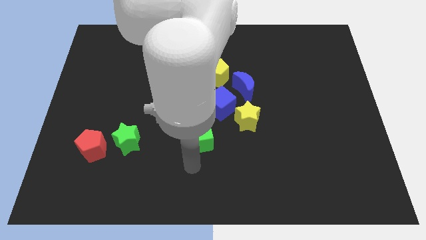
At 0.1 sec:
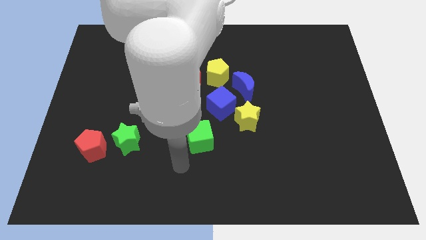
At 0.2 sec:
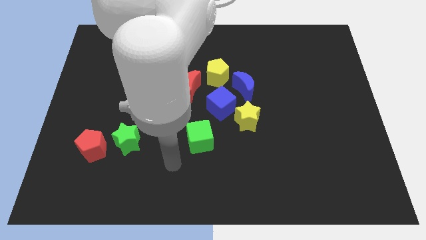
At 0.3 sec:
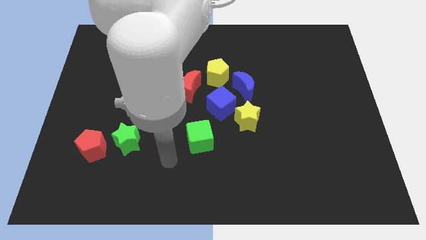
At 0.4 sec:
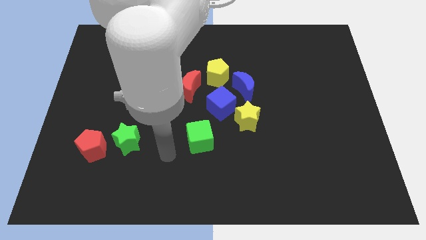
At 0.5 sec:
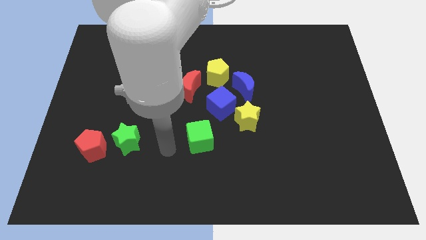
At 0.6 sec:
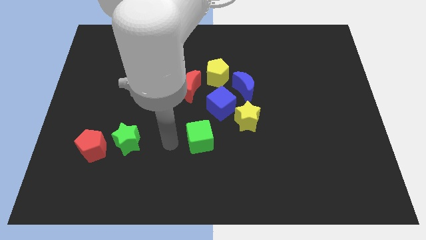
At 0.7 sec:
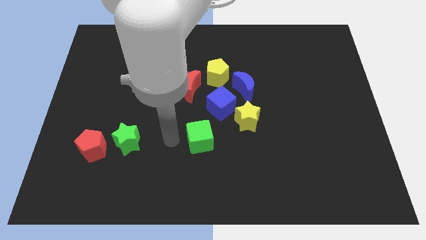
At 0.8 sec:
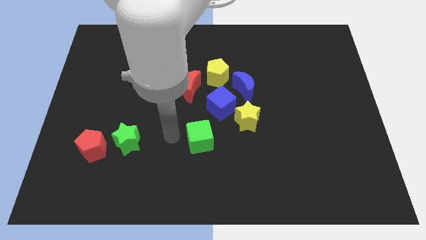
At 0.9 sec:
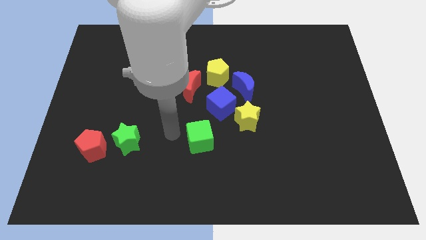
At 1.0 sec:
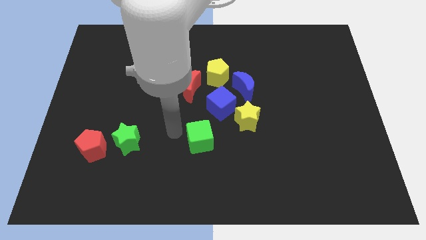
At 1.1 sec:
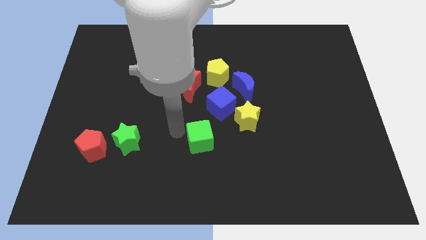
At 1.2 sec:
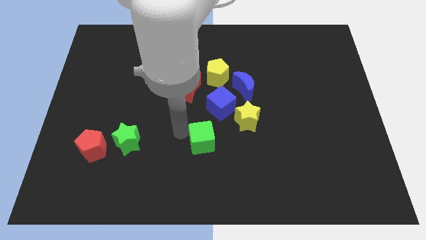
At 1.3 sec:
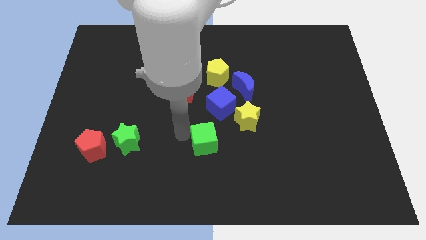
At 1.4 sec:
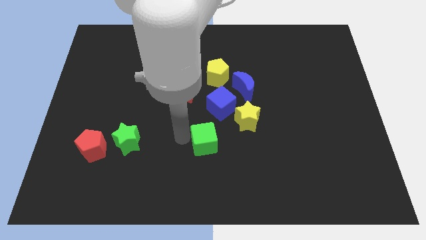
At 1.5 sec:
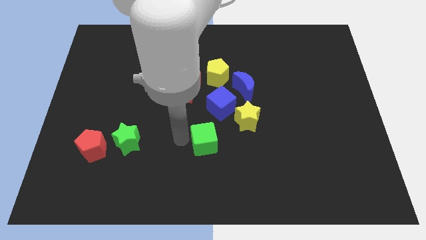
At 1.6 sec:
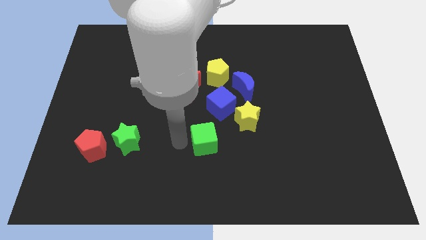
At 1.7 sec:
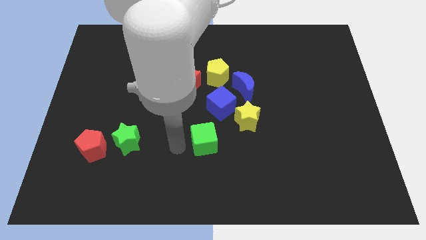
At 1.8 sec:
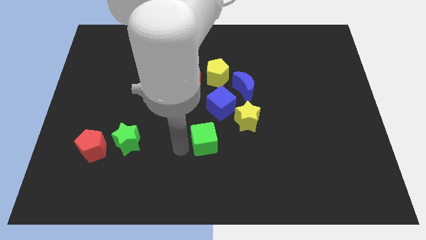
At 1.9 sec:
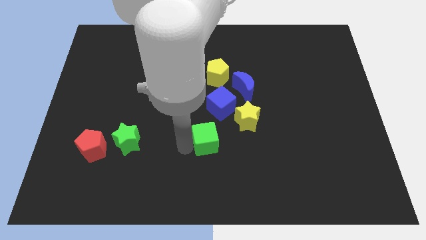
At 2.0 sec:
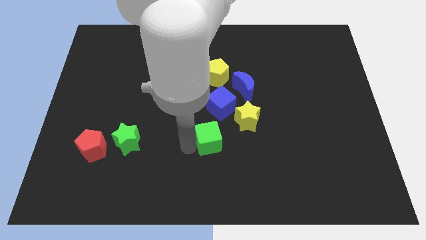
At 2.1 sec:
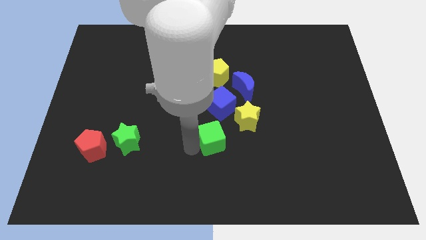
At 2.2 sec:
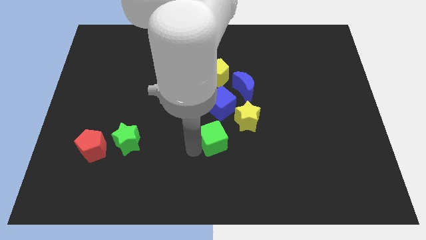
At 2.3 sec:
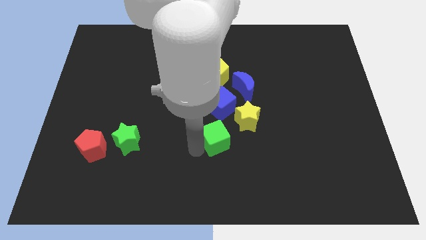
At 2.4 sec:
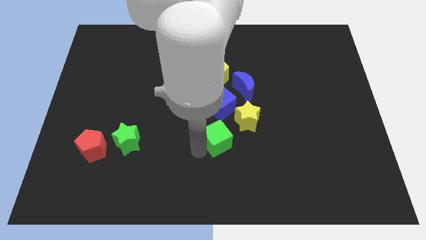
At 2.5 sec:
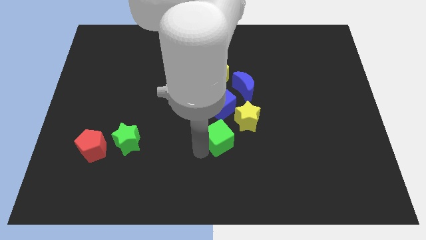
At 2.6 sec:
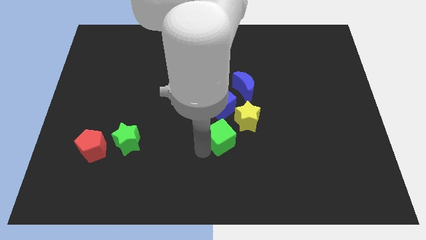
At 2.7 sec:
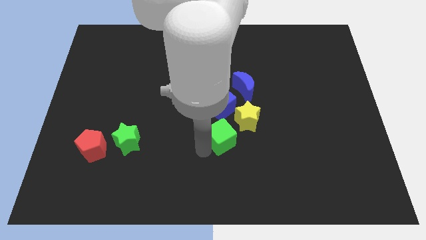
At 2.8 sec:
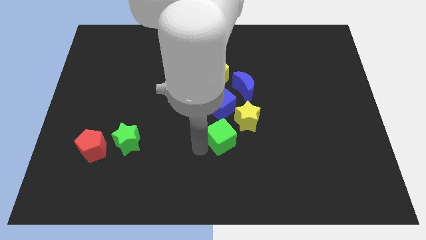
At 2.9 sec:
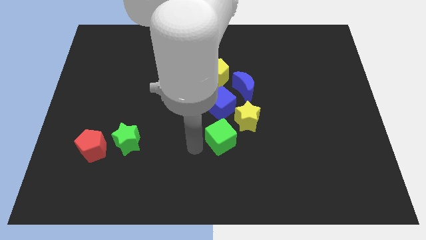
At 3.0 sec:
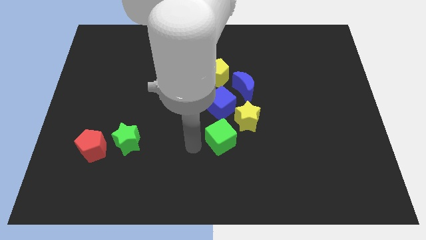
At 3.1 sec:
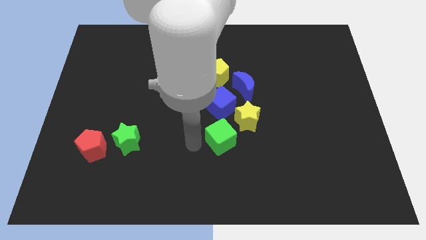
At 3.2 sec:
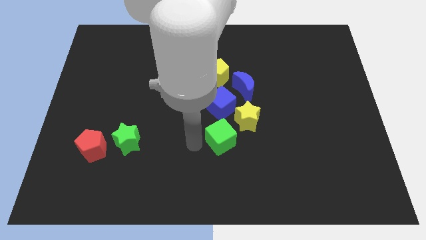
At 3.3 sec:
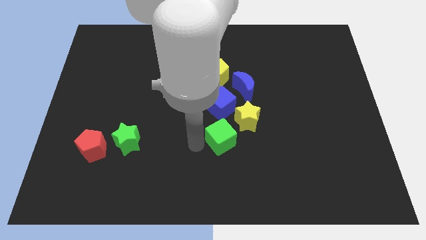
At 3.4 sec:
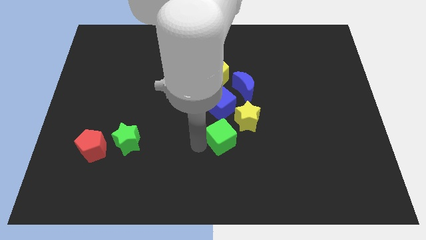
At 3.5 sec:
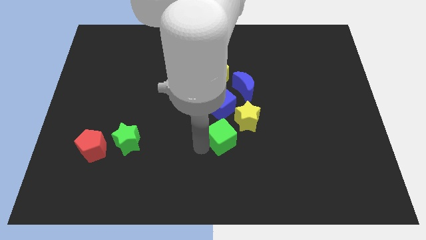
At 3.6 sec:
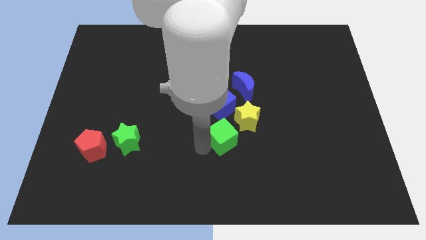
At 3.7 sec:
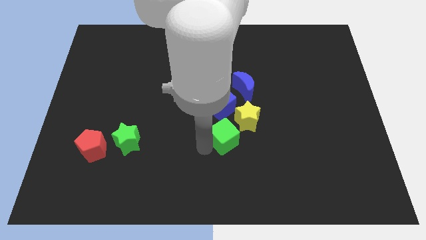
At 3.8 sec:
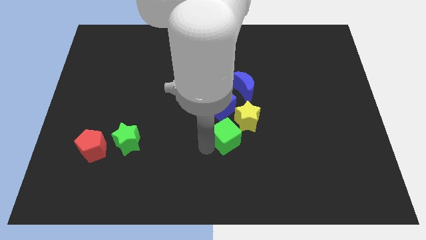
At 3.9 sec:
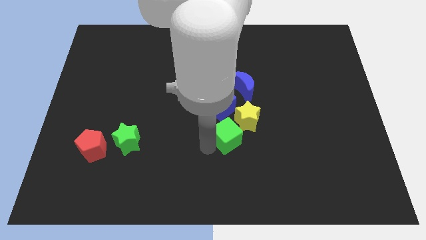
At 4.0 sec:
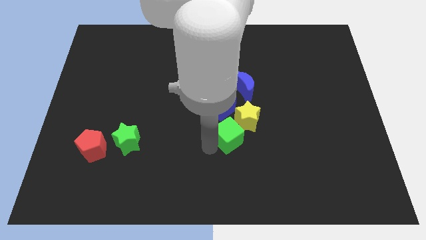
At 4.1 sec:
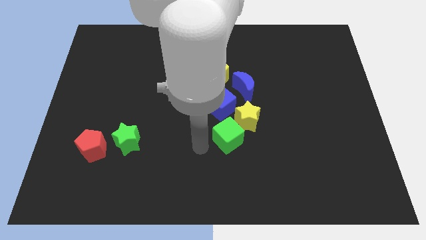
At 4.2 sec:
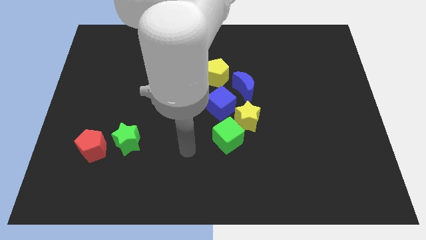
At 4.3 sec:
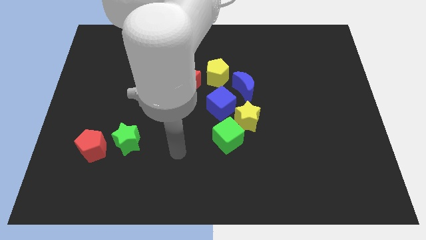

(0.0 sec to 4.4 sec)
move the green cube below to the blue cube

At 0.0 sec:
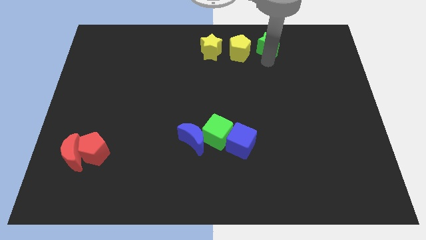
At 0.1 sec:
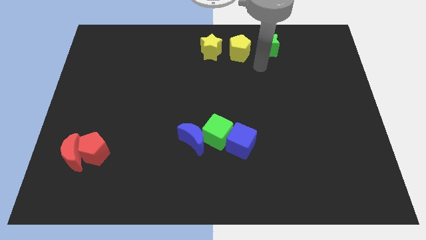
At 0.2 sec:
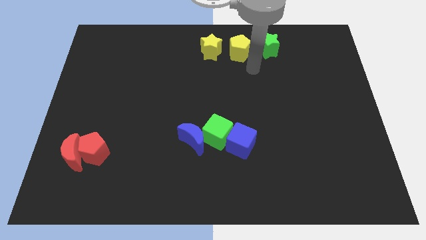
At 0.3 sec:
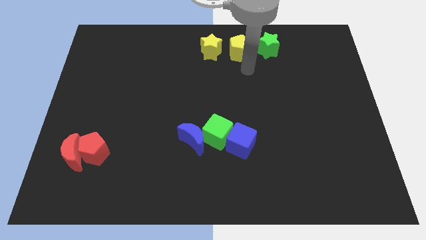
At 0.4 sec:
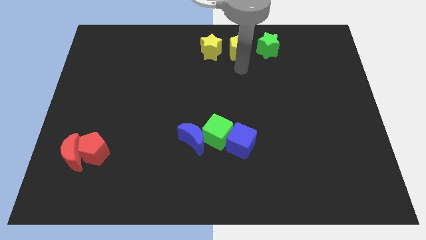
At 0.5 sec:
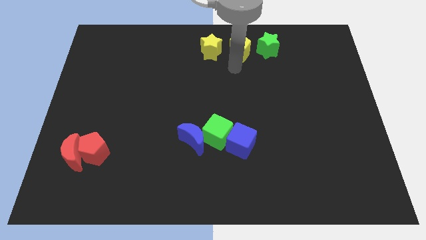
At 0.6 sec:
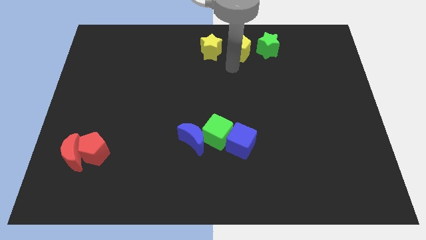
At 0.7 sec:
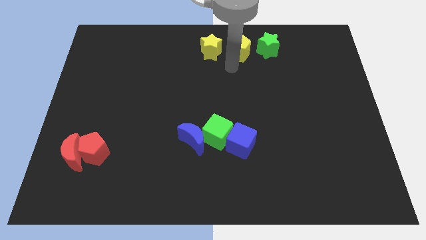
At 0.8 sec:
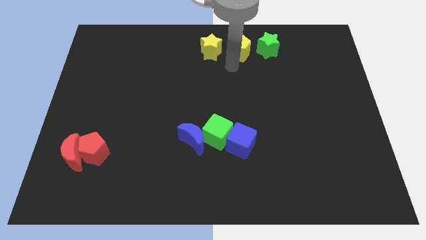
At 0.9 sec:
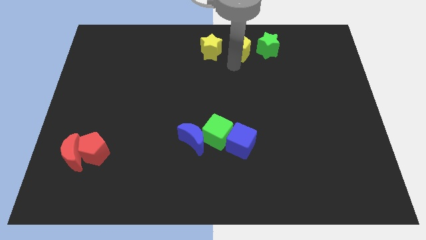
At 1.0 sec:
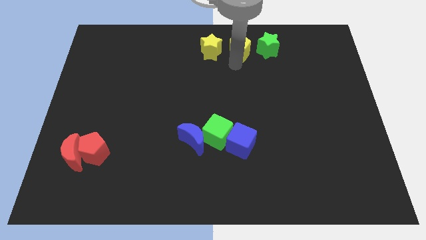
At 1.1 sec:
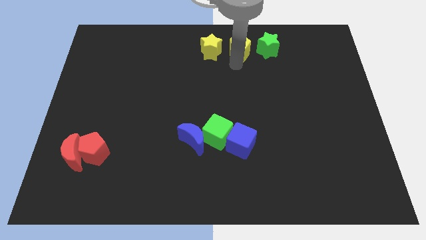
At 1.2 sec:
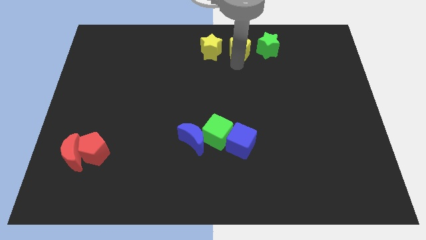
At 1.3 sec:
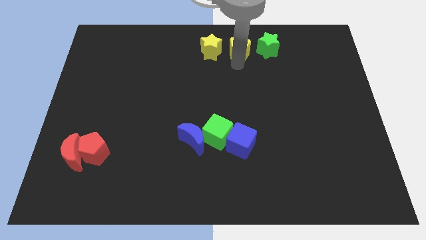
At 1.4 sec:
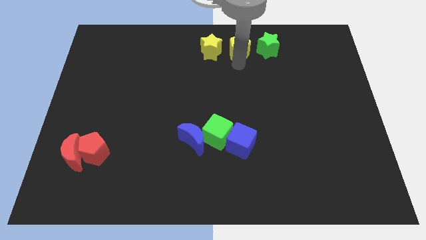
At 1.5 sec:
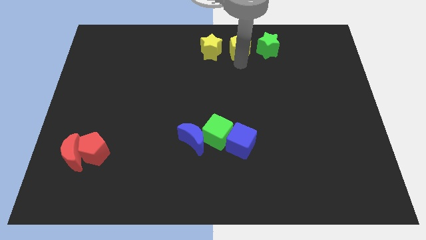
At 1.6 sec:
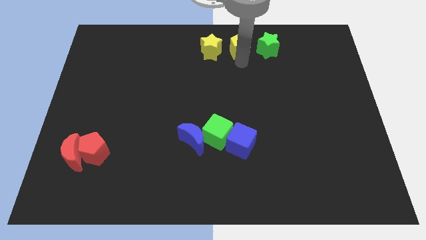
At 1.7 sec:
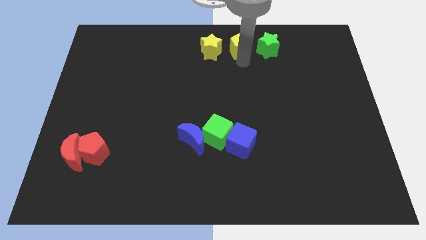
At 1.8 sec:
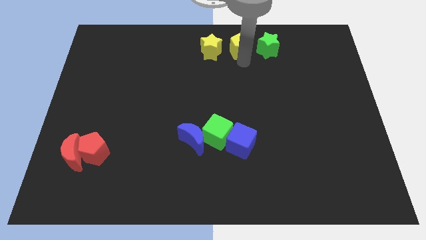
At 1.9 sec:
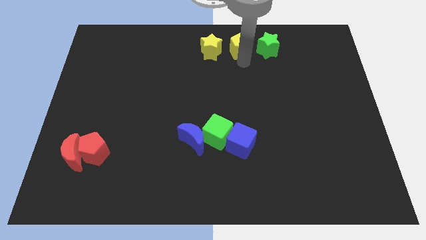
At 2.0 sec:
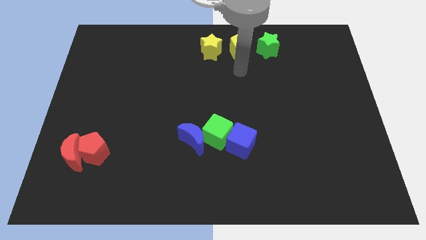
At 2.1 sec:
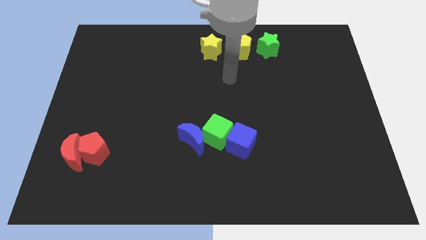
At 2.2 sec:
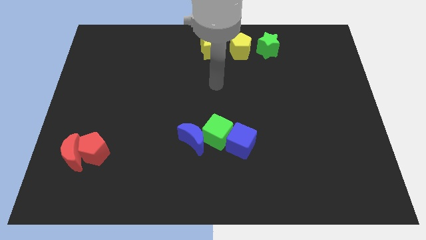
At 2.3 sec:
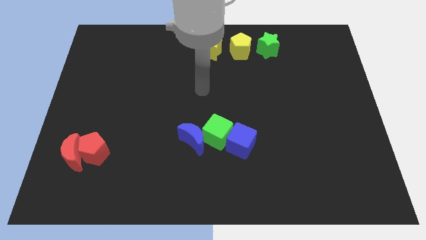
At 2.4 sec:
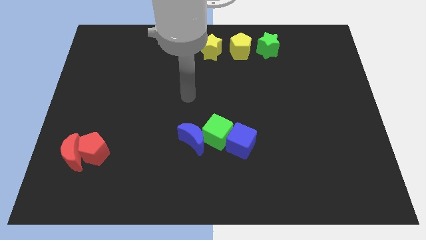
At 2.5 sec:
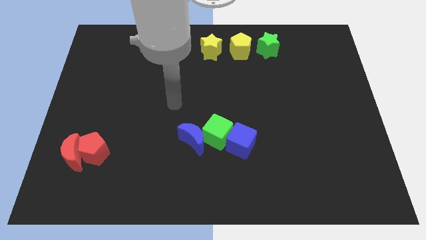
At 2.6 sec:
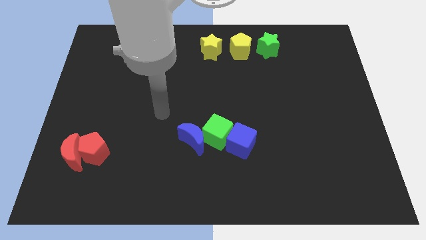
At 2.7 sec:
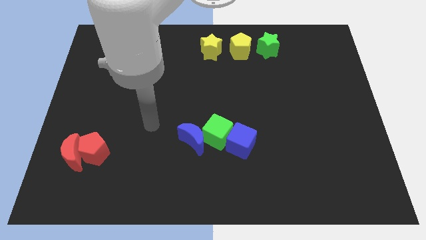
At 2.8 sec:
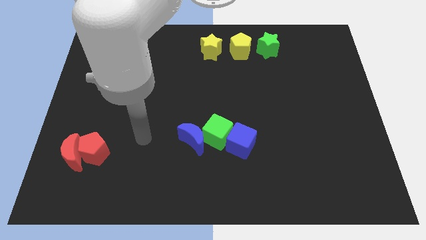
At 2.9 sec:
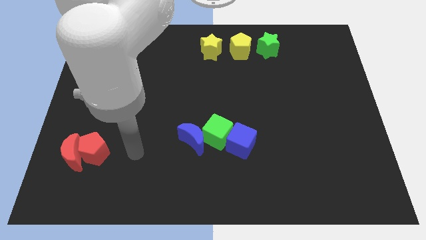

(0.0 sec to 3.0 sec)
point your arm to the right of the red pentagon

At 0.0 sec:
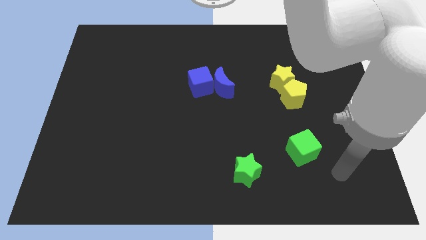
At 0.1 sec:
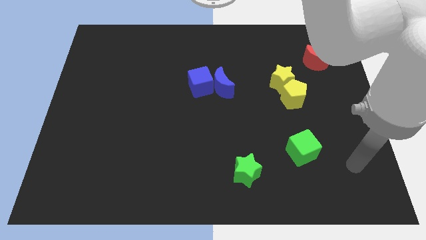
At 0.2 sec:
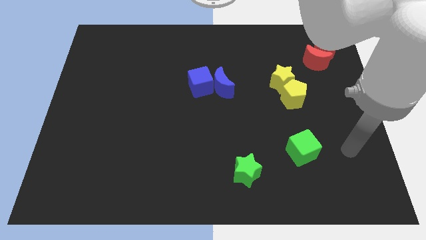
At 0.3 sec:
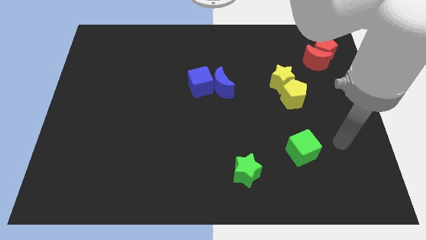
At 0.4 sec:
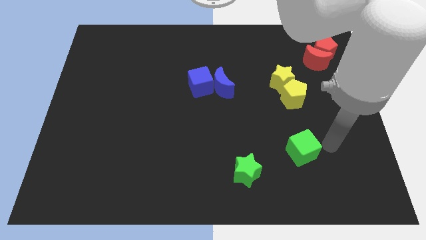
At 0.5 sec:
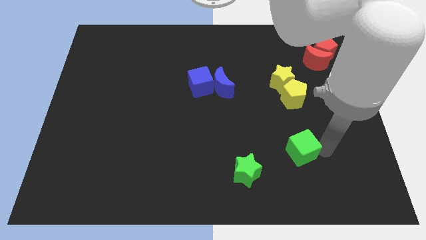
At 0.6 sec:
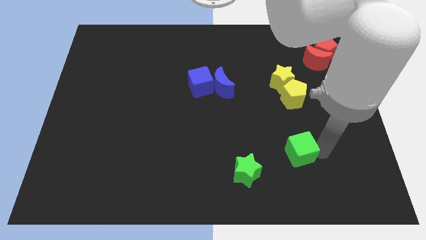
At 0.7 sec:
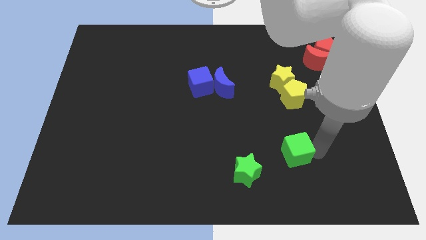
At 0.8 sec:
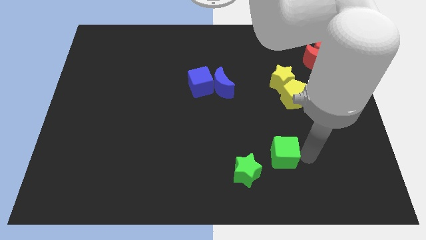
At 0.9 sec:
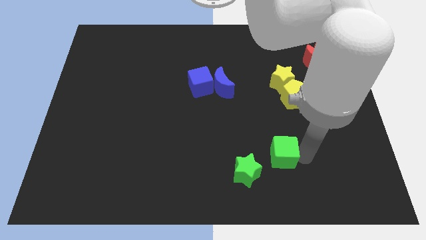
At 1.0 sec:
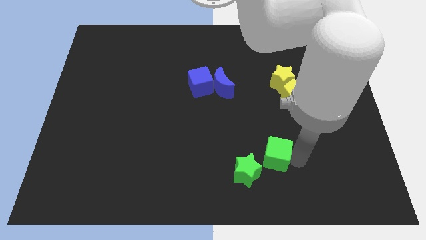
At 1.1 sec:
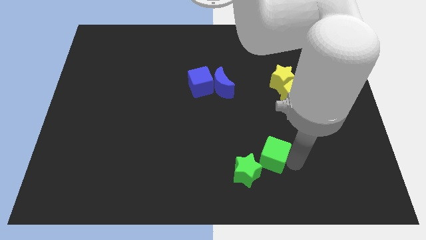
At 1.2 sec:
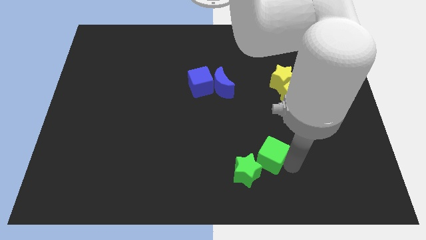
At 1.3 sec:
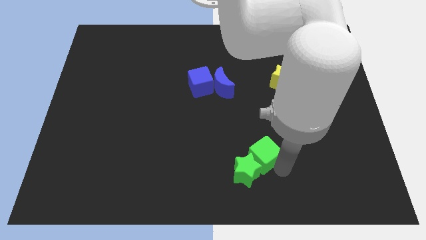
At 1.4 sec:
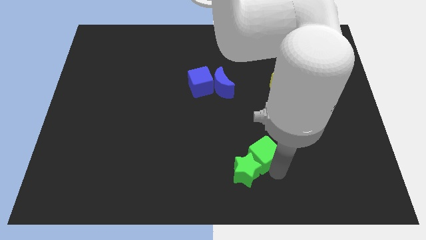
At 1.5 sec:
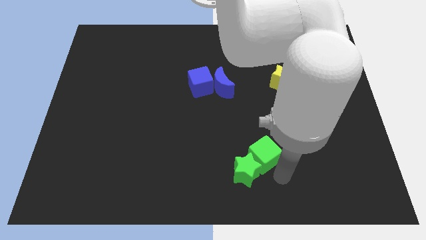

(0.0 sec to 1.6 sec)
slide the green cube close to the green star
